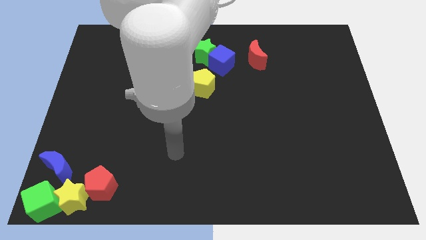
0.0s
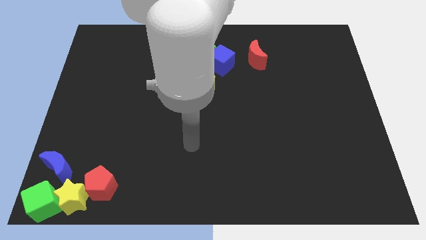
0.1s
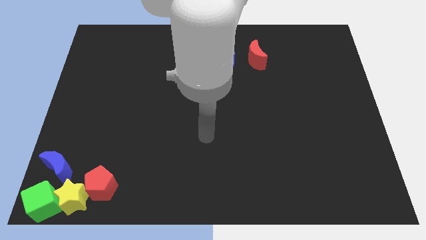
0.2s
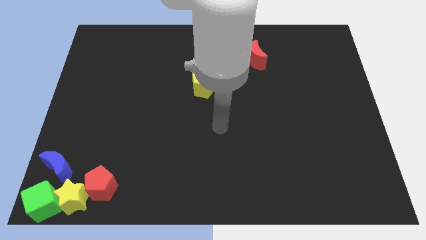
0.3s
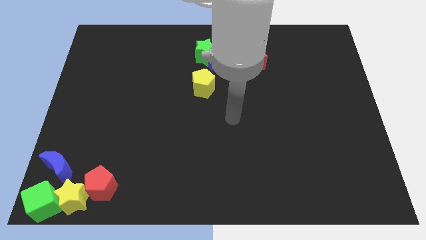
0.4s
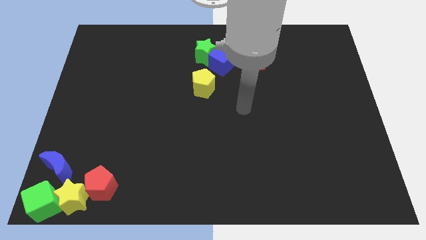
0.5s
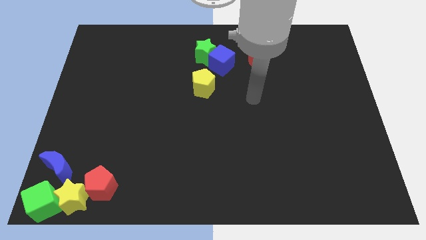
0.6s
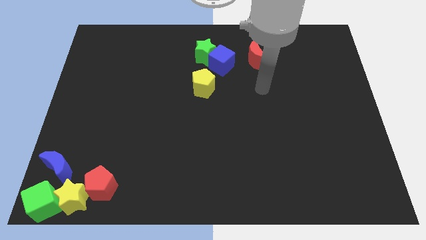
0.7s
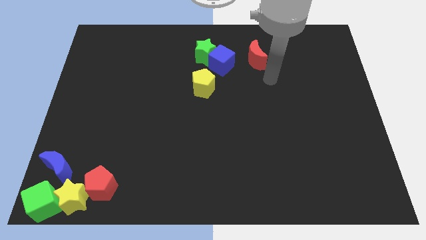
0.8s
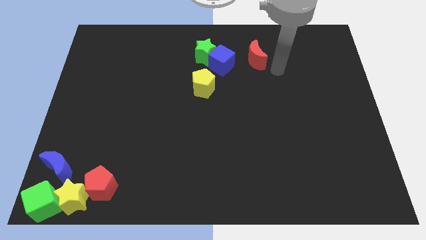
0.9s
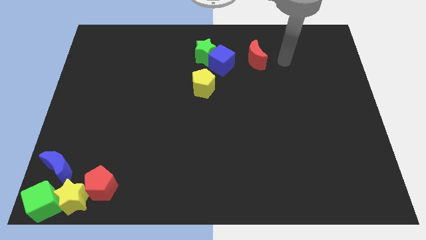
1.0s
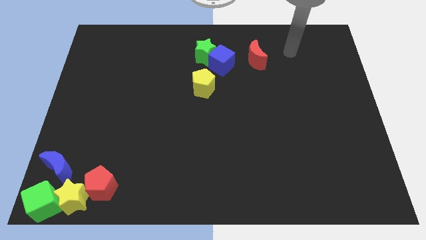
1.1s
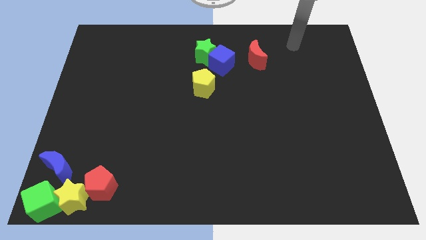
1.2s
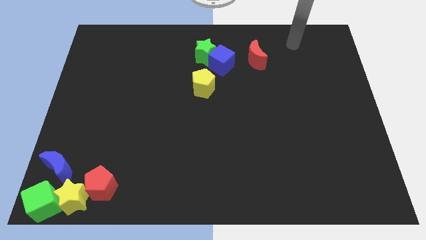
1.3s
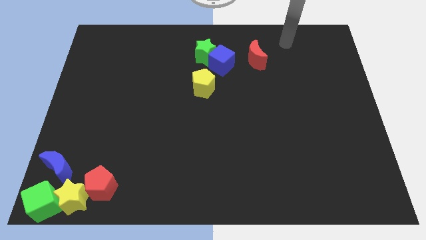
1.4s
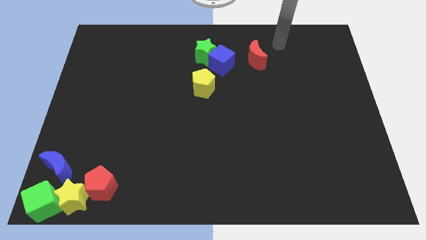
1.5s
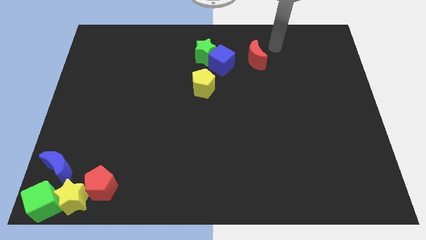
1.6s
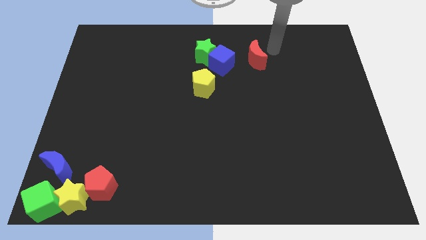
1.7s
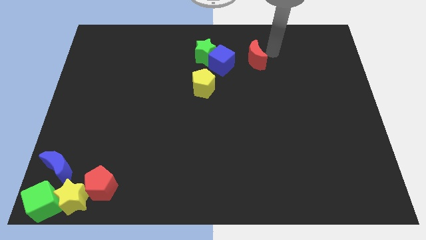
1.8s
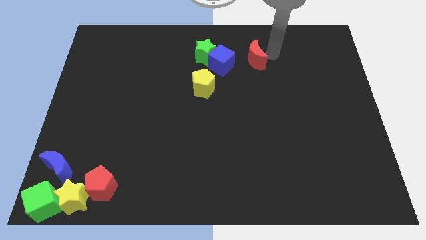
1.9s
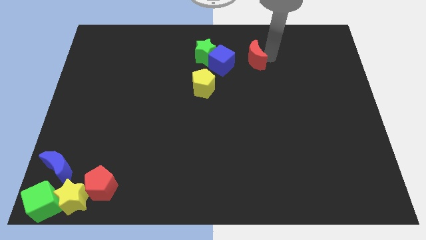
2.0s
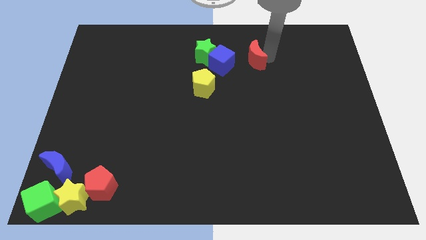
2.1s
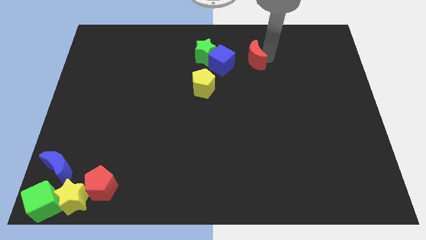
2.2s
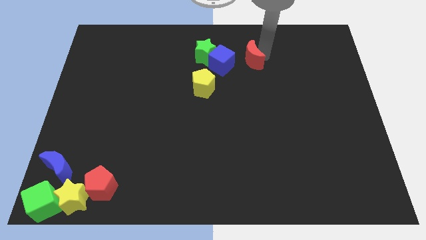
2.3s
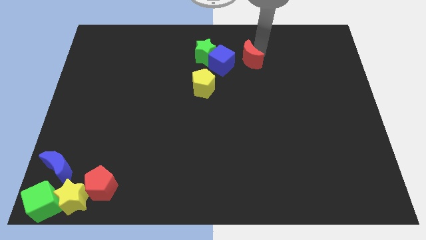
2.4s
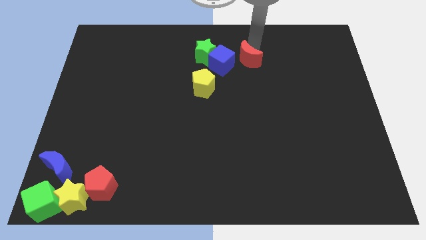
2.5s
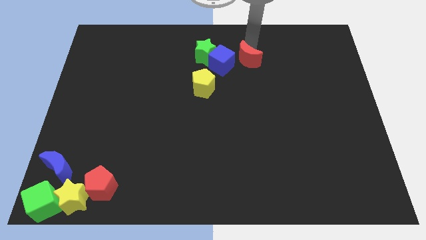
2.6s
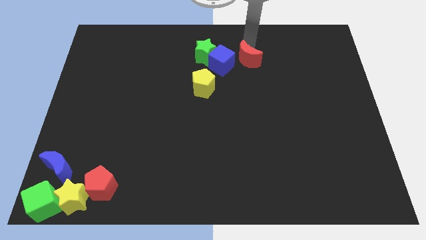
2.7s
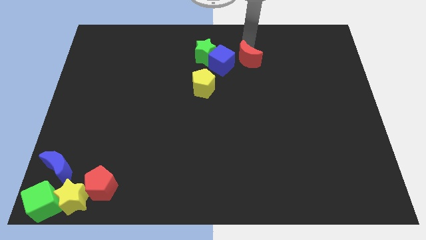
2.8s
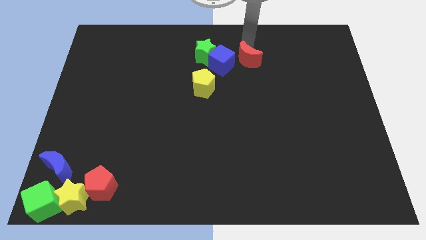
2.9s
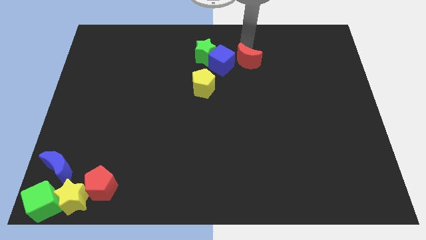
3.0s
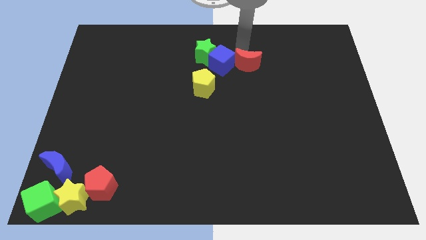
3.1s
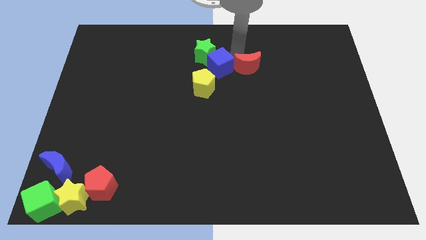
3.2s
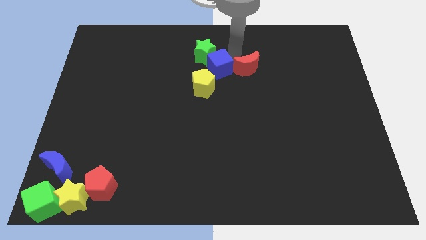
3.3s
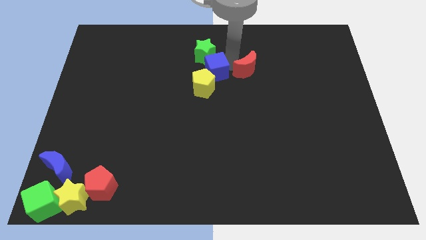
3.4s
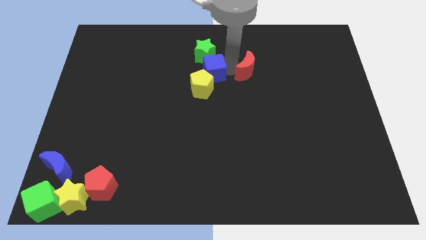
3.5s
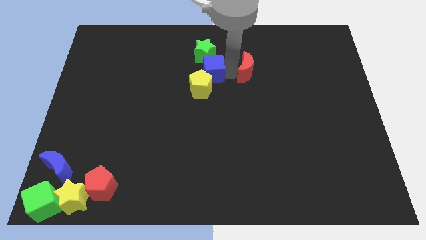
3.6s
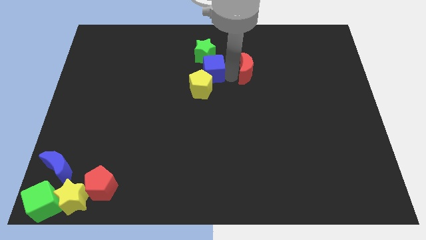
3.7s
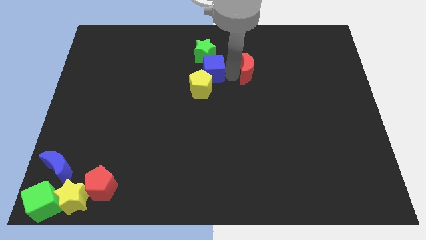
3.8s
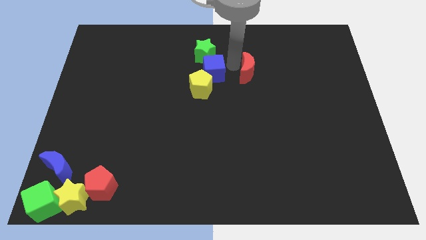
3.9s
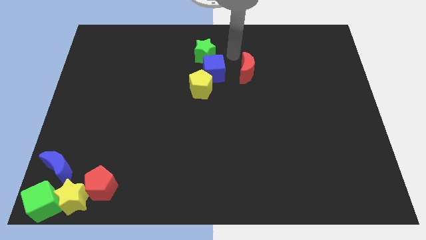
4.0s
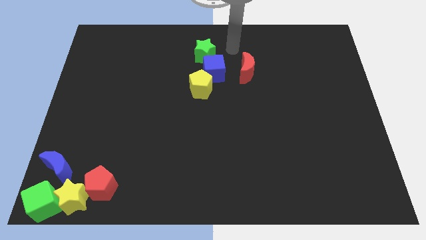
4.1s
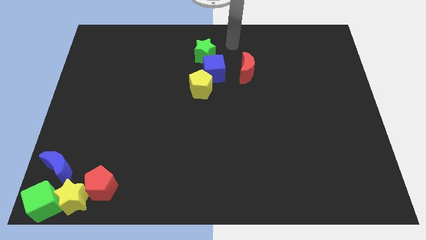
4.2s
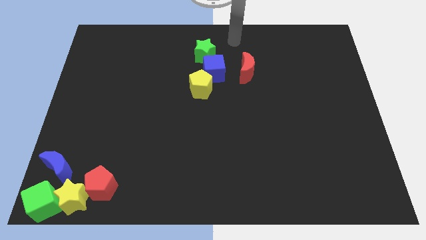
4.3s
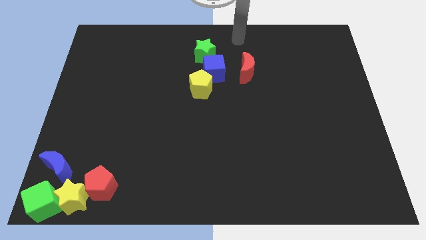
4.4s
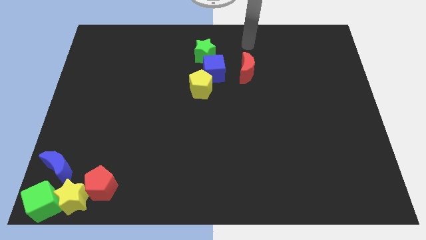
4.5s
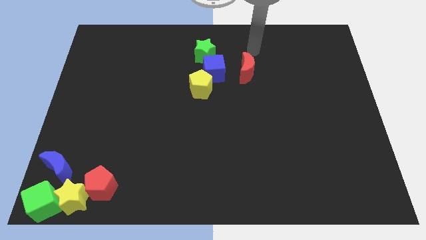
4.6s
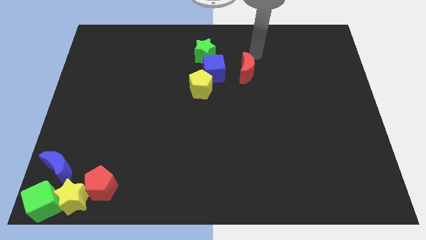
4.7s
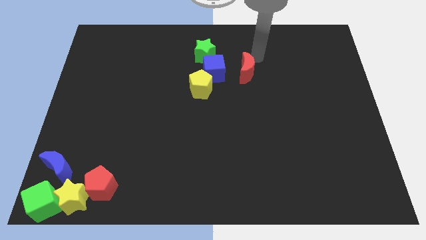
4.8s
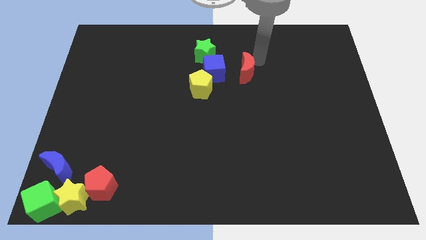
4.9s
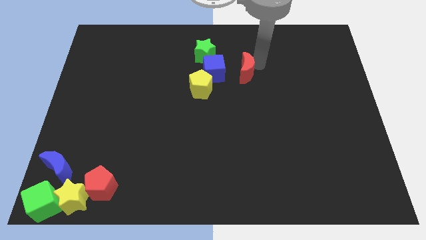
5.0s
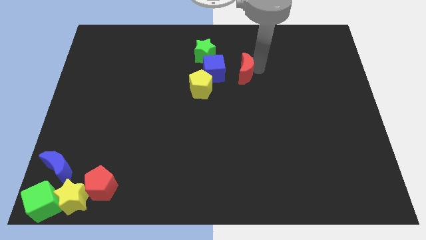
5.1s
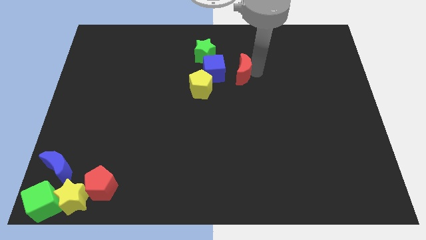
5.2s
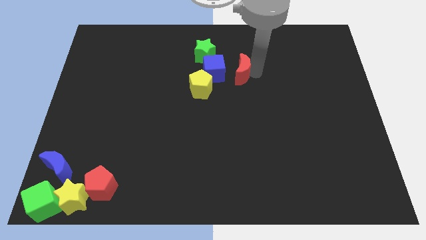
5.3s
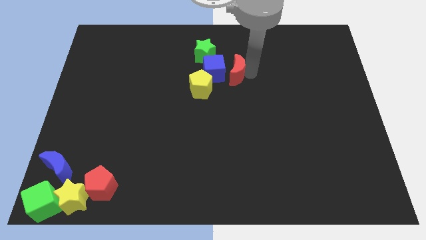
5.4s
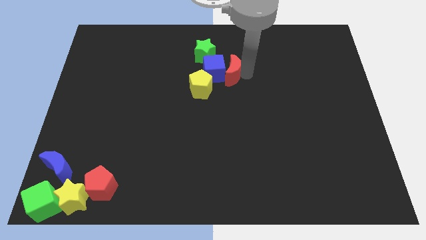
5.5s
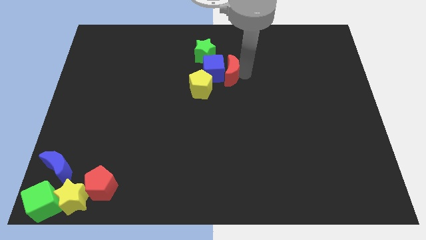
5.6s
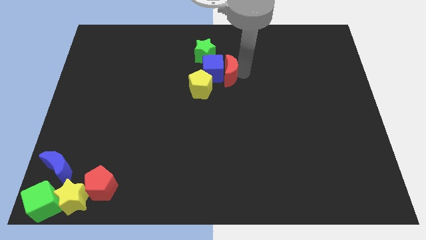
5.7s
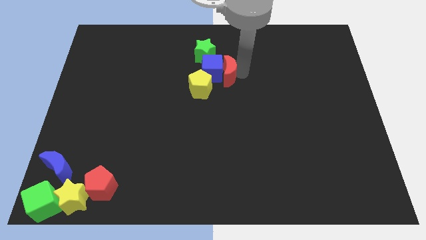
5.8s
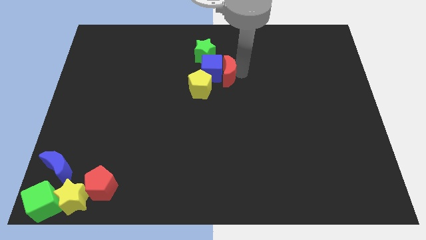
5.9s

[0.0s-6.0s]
push the red moon to the right side of the blue cube

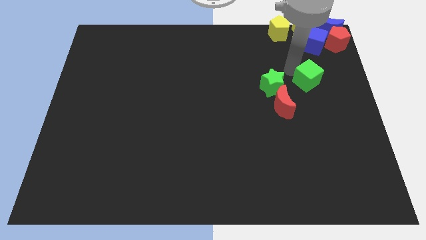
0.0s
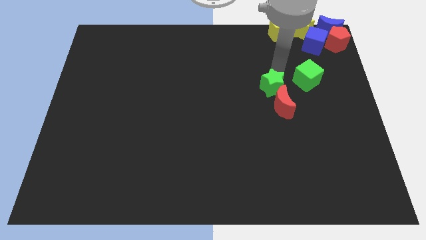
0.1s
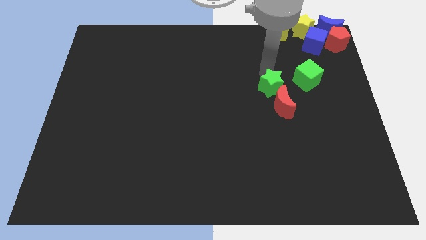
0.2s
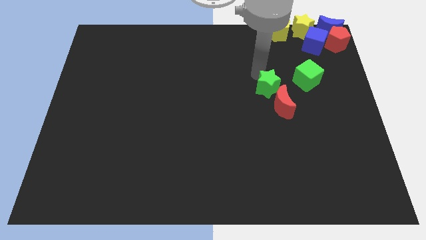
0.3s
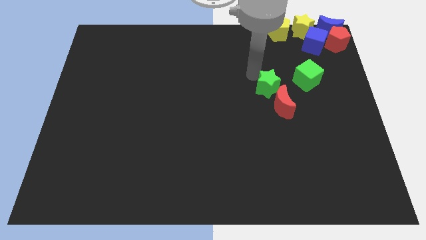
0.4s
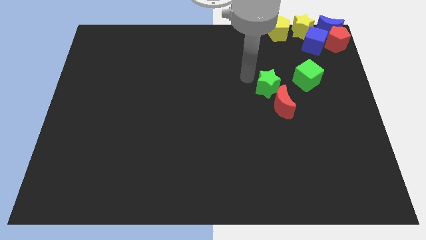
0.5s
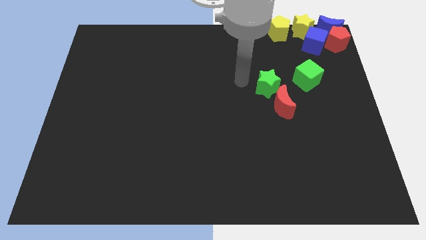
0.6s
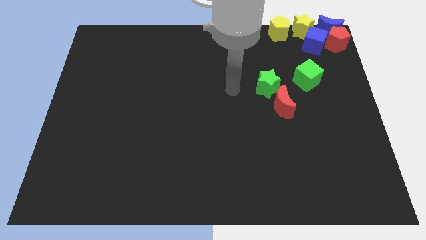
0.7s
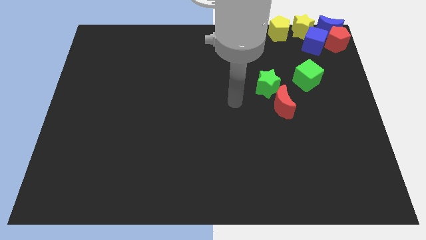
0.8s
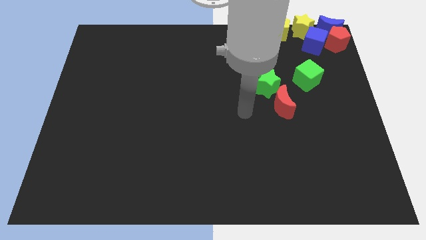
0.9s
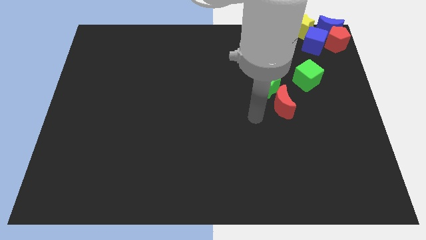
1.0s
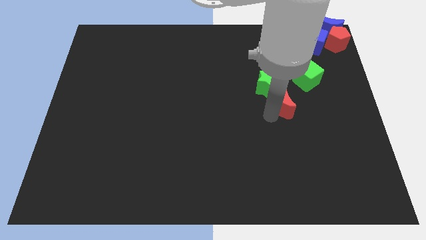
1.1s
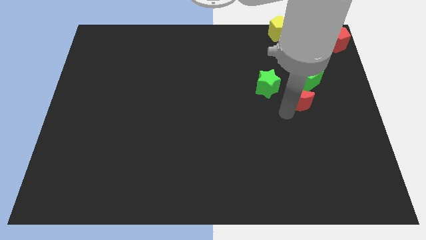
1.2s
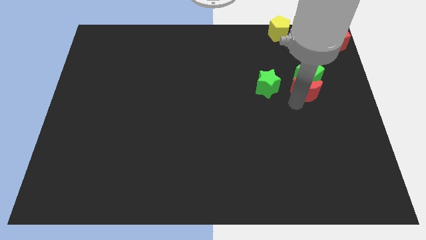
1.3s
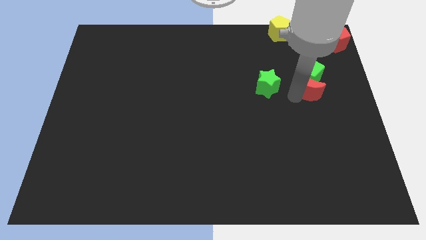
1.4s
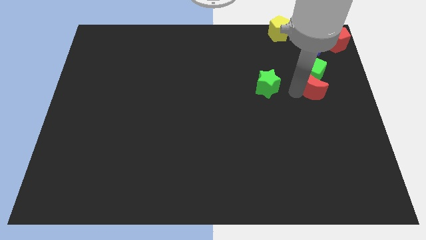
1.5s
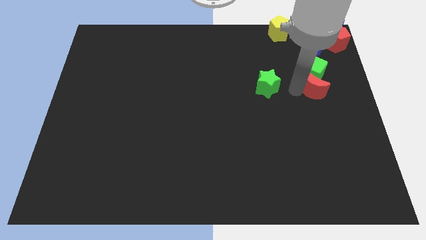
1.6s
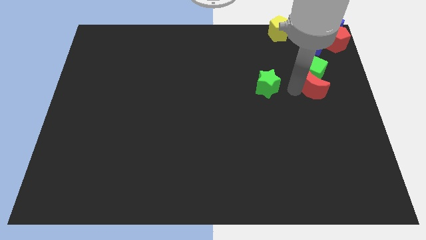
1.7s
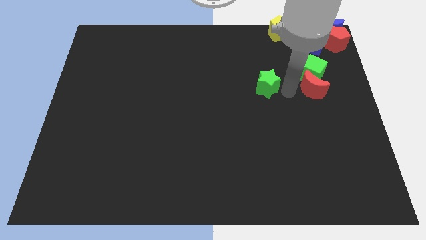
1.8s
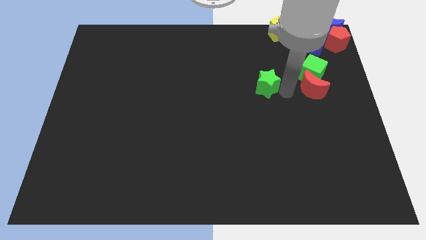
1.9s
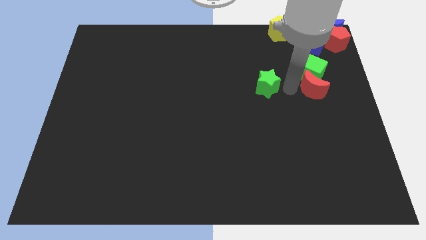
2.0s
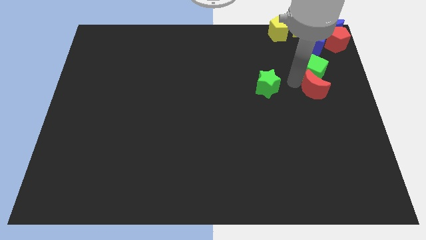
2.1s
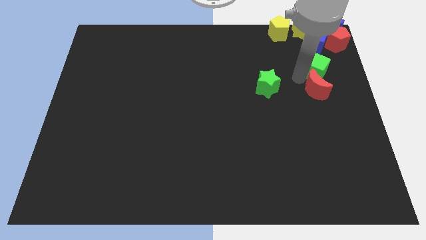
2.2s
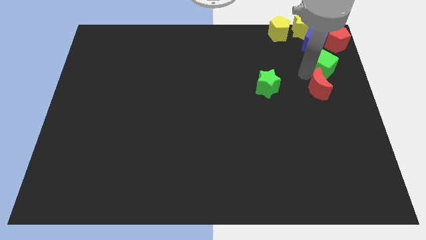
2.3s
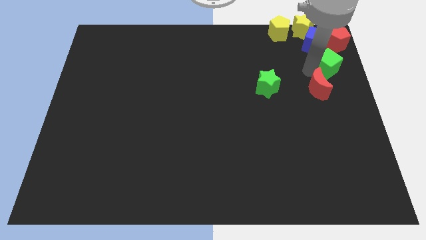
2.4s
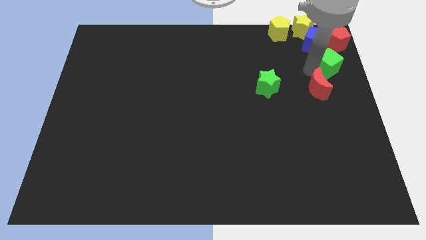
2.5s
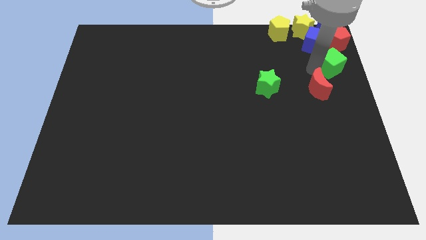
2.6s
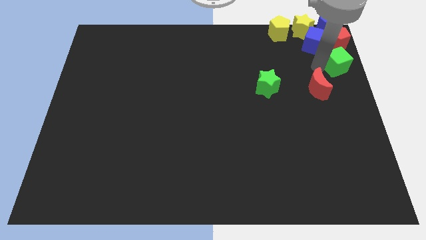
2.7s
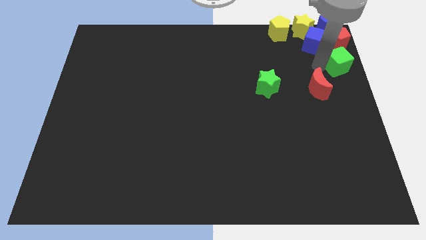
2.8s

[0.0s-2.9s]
put the green cube and red moon underneath the red pentagon
